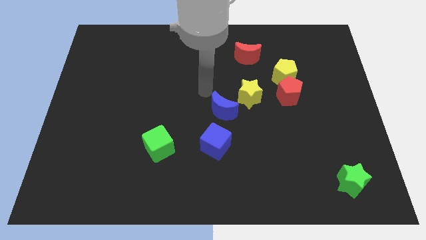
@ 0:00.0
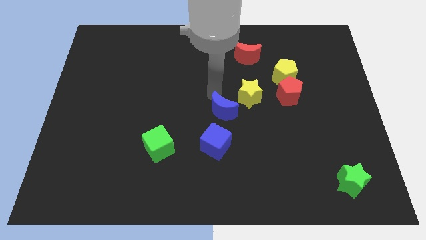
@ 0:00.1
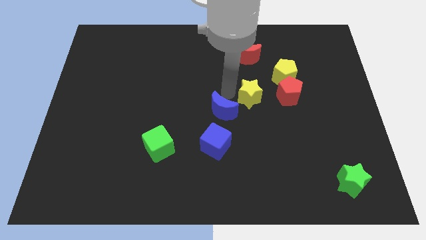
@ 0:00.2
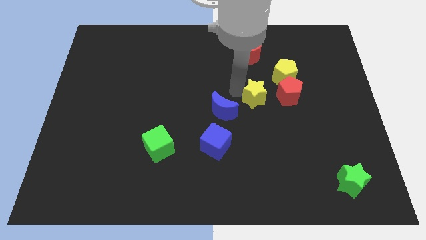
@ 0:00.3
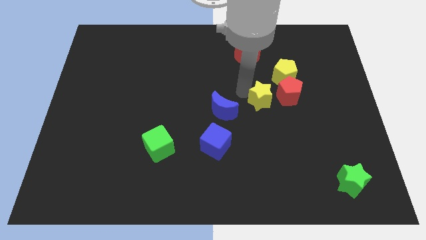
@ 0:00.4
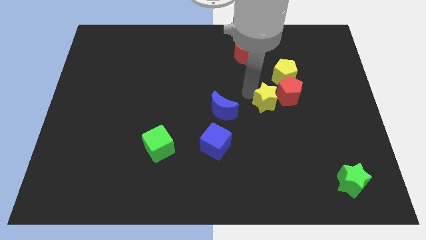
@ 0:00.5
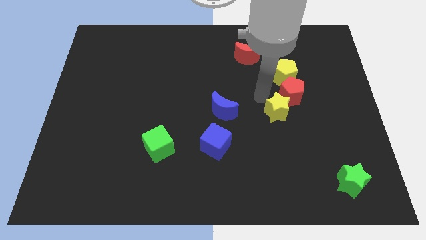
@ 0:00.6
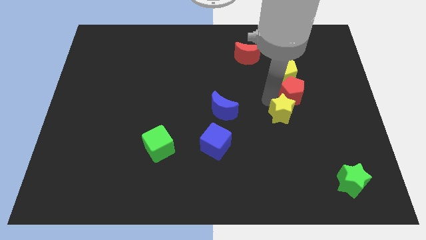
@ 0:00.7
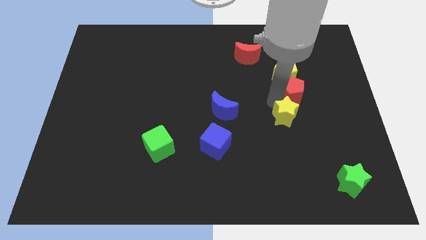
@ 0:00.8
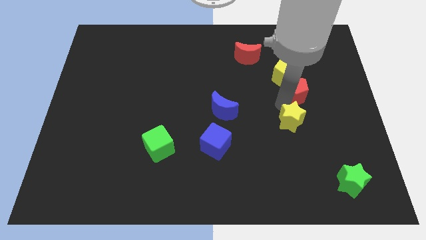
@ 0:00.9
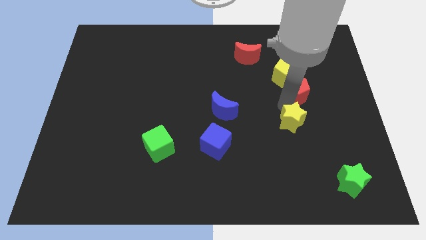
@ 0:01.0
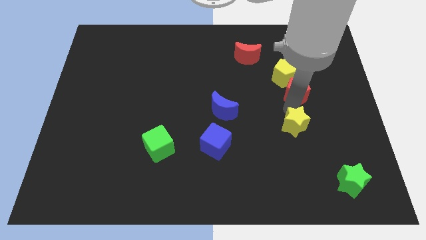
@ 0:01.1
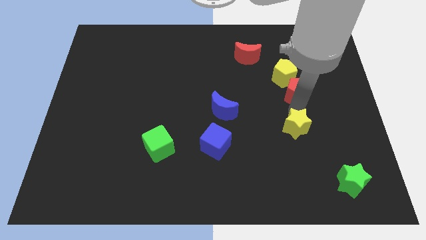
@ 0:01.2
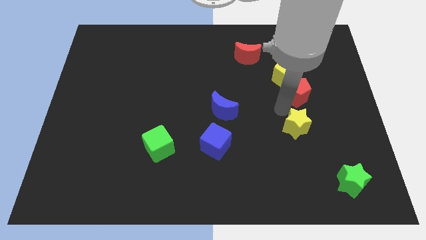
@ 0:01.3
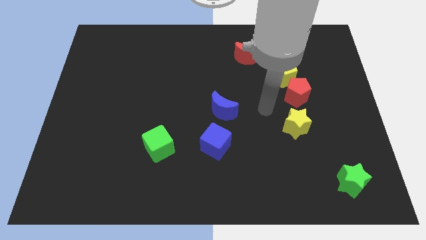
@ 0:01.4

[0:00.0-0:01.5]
place the yellow star right to the blue moon

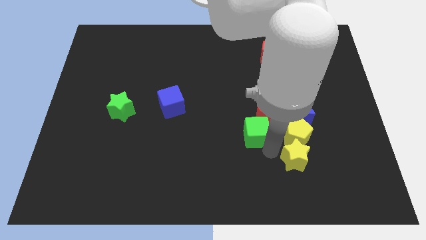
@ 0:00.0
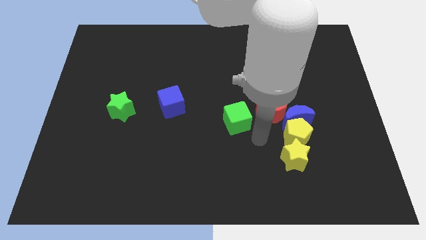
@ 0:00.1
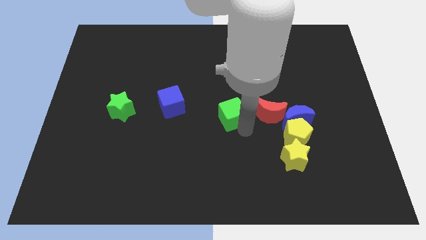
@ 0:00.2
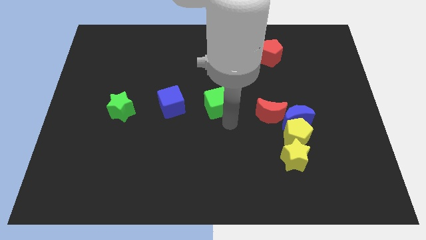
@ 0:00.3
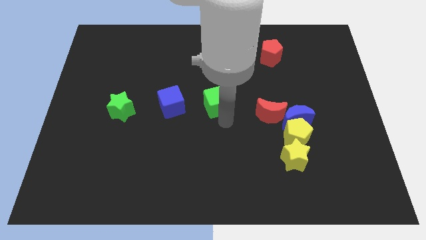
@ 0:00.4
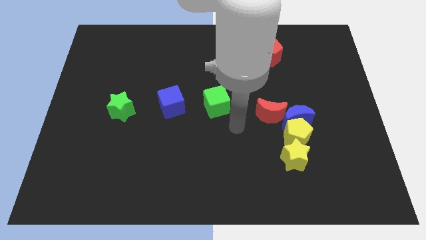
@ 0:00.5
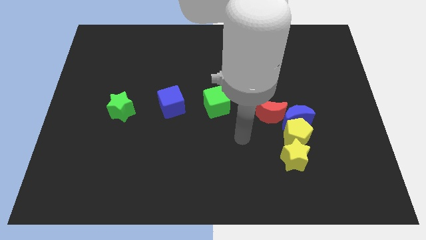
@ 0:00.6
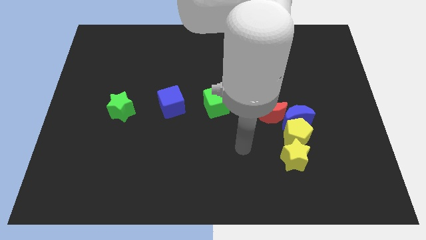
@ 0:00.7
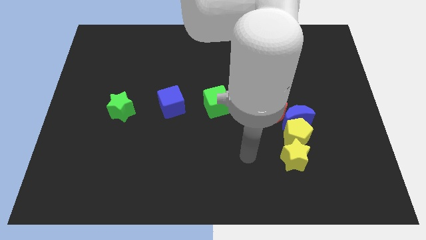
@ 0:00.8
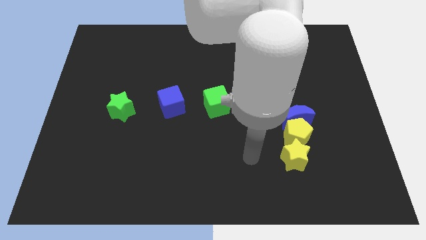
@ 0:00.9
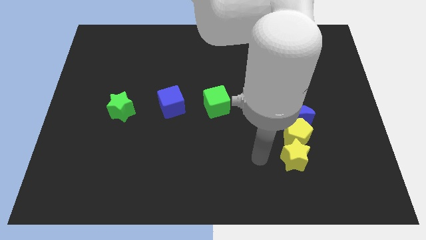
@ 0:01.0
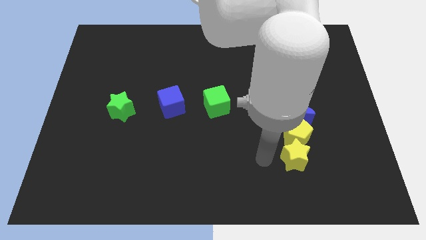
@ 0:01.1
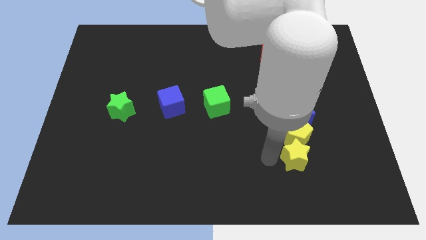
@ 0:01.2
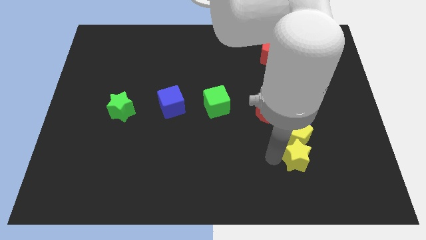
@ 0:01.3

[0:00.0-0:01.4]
place the green cube to the right of the blue cube

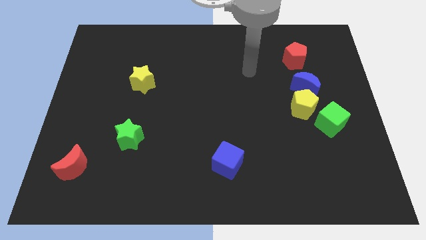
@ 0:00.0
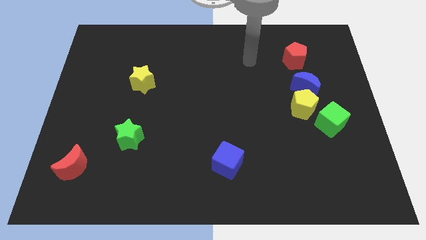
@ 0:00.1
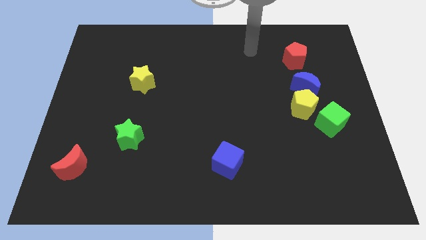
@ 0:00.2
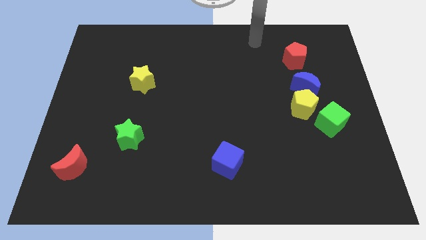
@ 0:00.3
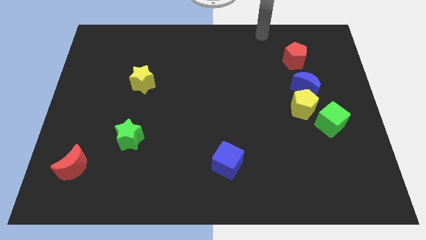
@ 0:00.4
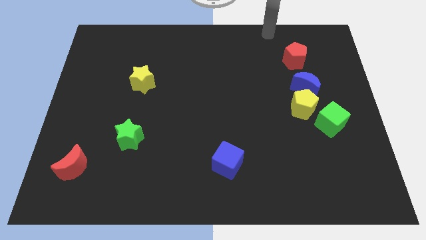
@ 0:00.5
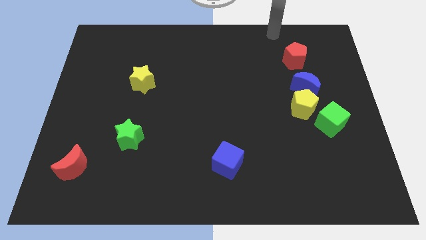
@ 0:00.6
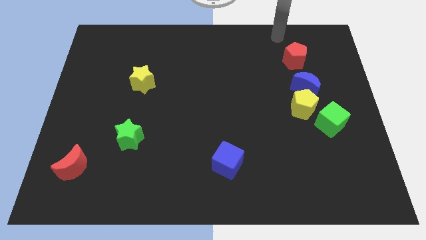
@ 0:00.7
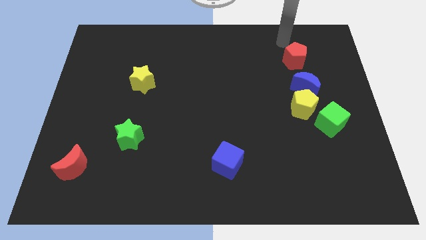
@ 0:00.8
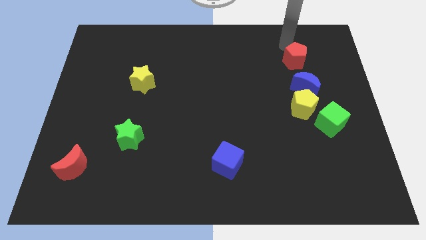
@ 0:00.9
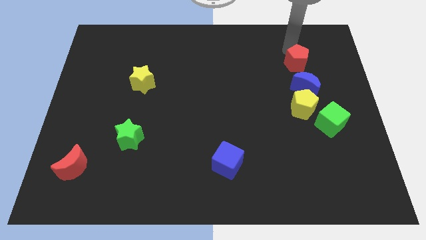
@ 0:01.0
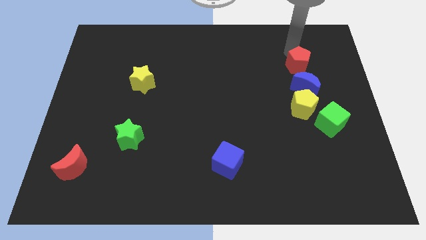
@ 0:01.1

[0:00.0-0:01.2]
push red pentagon slightly down

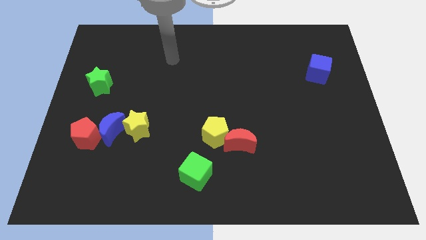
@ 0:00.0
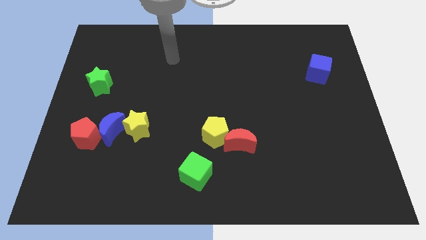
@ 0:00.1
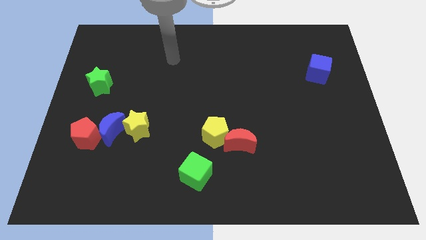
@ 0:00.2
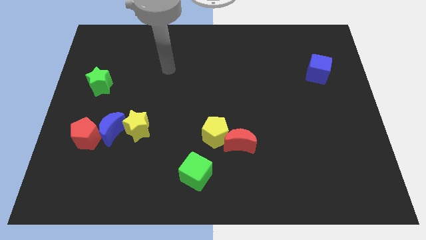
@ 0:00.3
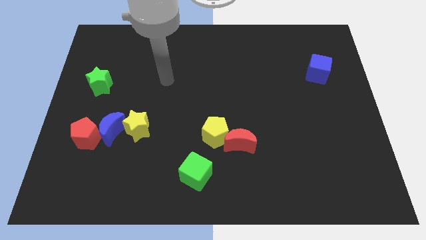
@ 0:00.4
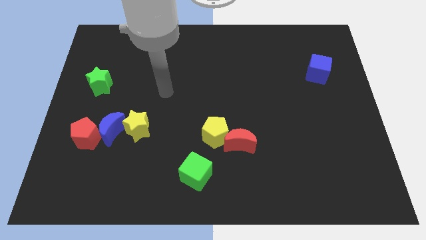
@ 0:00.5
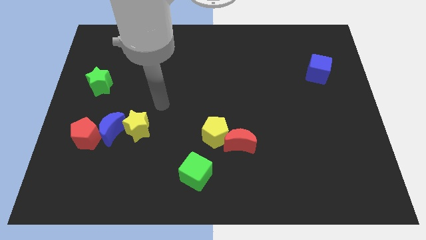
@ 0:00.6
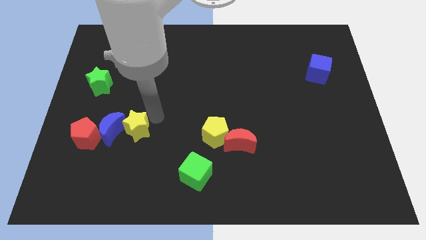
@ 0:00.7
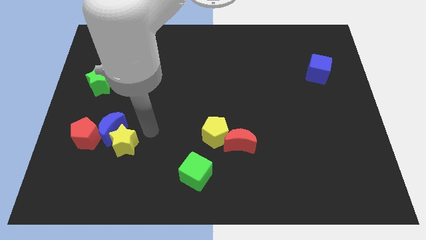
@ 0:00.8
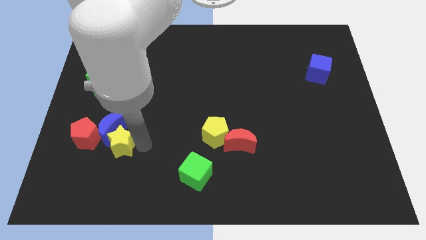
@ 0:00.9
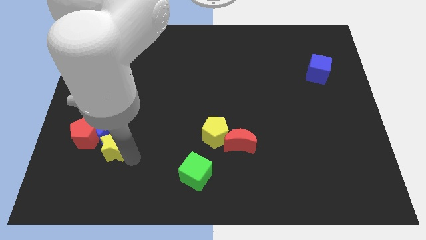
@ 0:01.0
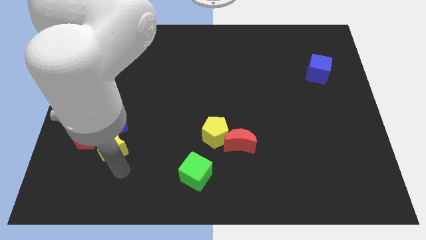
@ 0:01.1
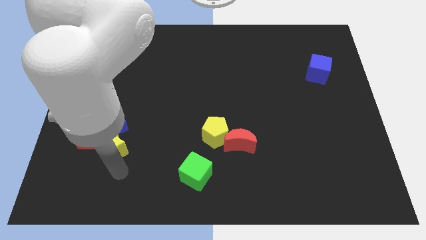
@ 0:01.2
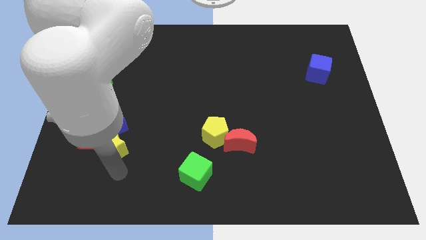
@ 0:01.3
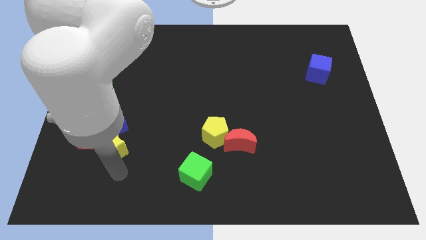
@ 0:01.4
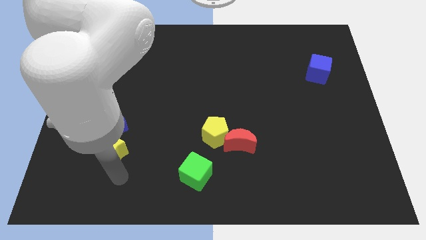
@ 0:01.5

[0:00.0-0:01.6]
put the yellow star at the bottom side of the blue moon

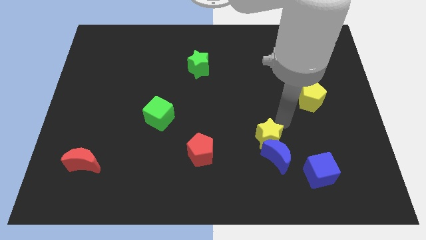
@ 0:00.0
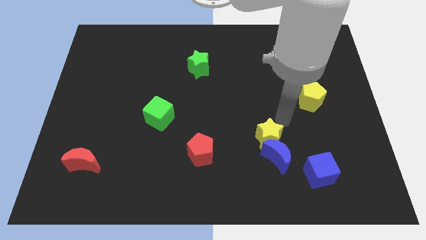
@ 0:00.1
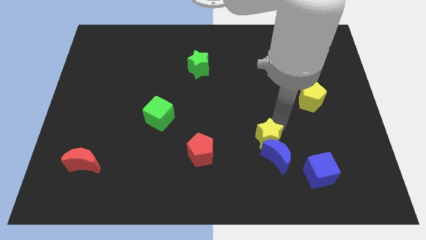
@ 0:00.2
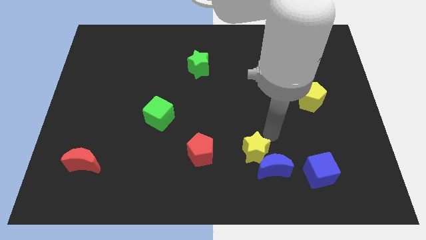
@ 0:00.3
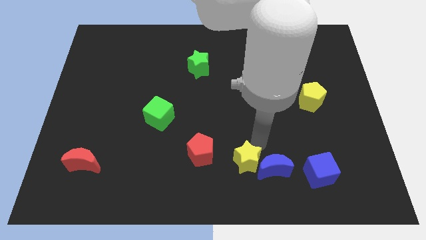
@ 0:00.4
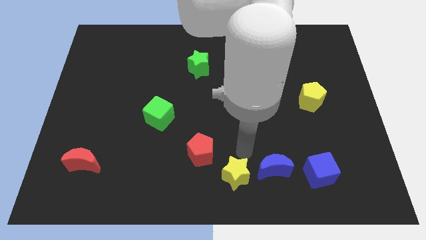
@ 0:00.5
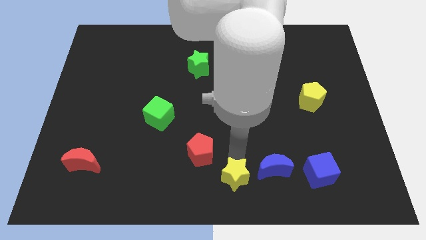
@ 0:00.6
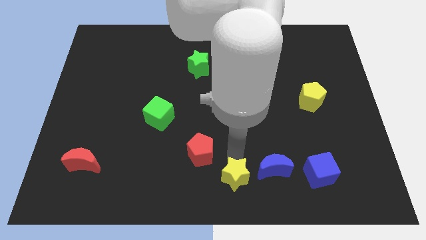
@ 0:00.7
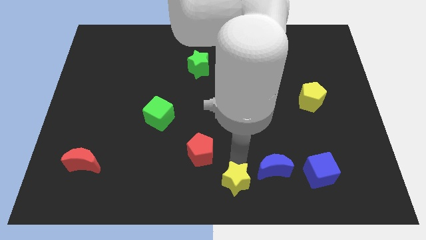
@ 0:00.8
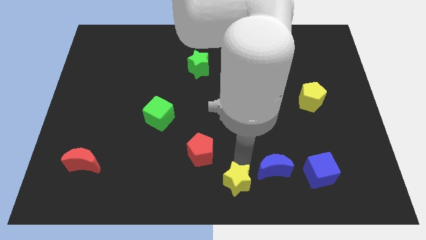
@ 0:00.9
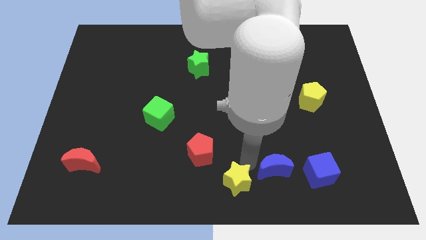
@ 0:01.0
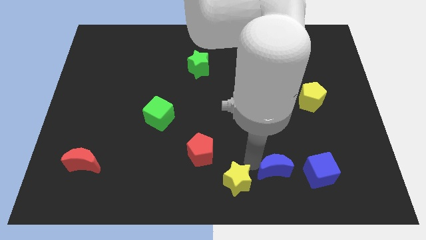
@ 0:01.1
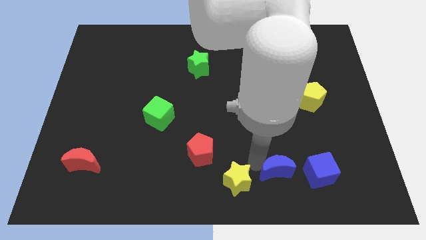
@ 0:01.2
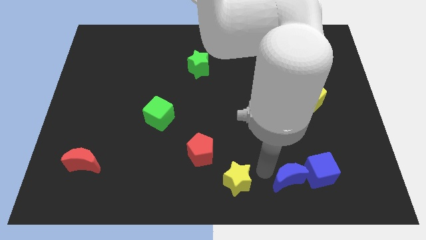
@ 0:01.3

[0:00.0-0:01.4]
move the yellow star parallel to the left side of the blue moon

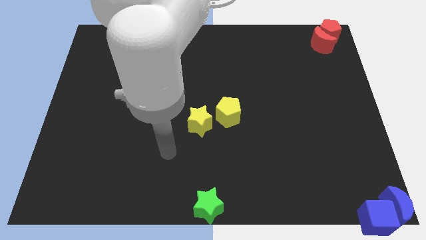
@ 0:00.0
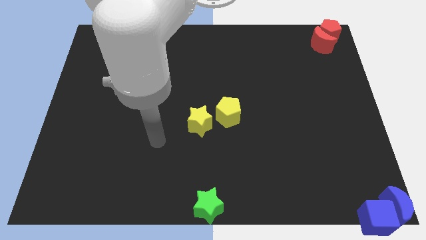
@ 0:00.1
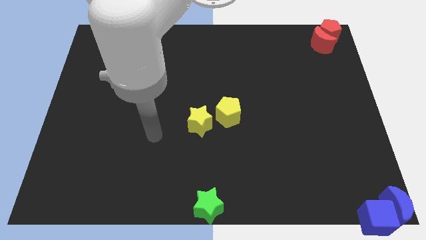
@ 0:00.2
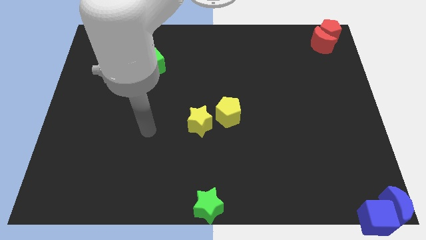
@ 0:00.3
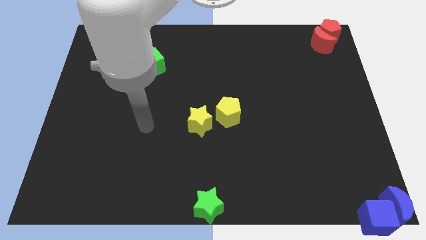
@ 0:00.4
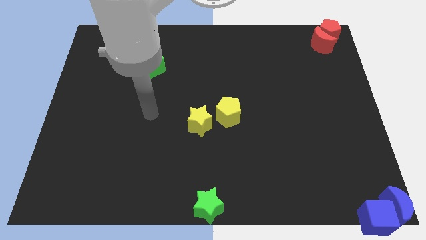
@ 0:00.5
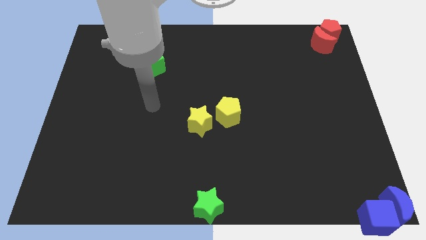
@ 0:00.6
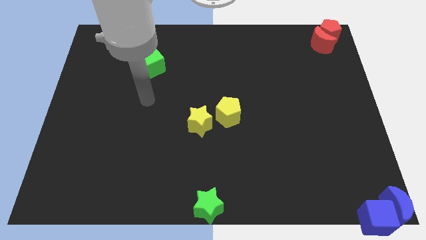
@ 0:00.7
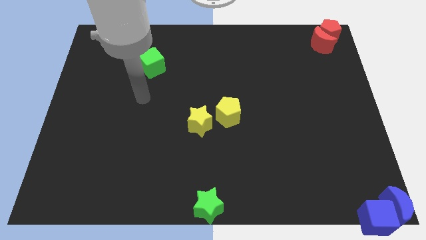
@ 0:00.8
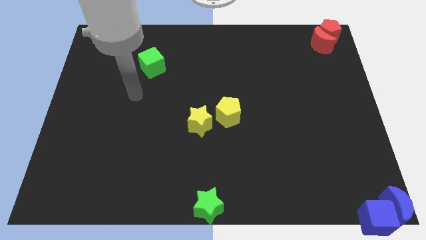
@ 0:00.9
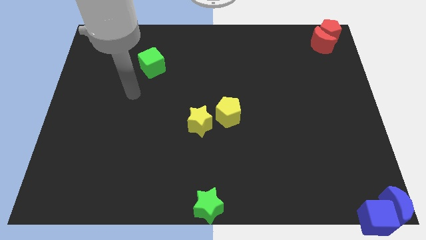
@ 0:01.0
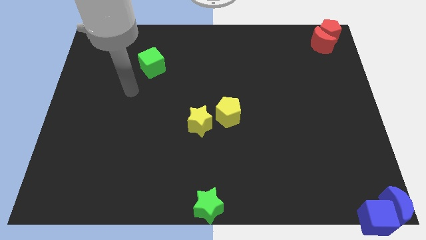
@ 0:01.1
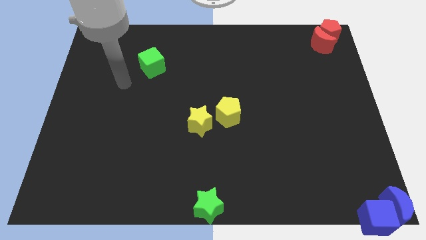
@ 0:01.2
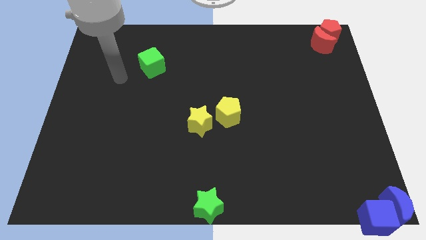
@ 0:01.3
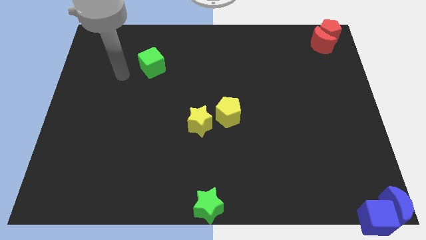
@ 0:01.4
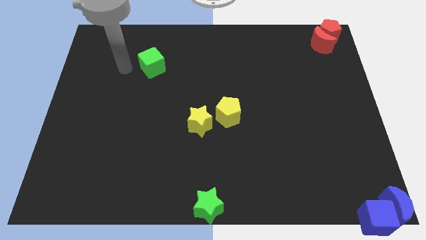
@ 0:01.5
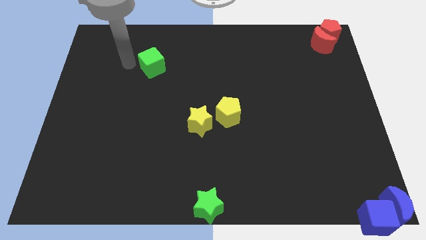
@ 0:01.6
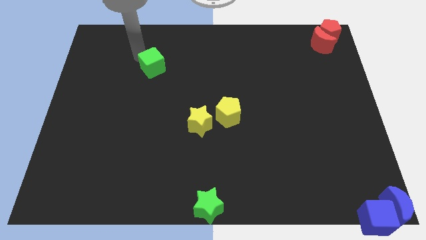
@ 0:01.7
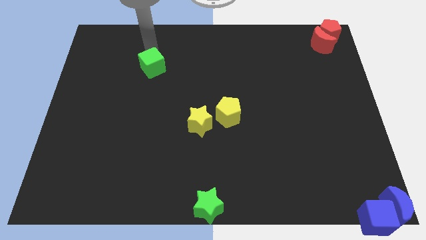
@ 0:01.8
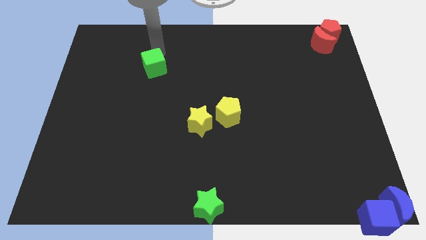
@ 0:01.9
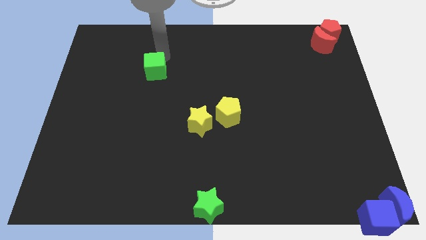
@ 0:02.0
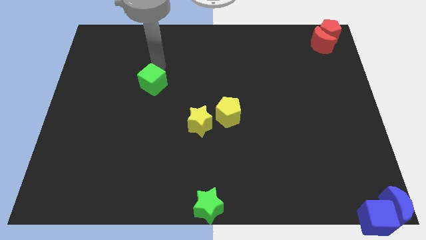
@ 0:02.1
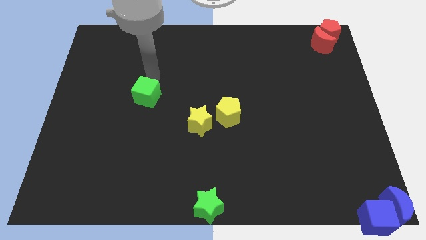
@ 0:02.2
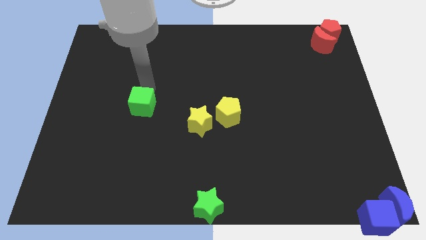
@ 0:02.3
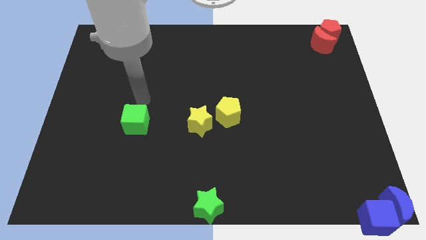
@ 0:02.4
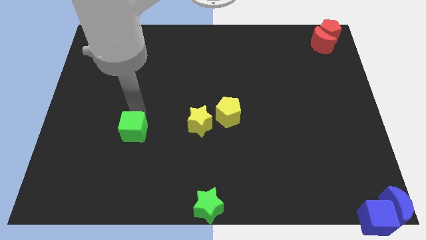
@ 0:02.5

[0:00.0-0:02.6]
place the green cube left to the yellow star
